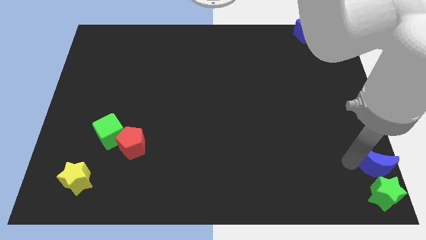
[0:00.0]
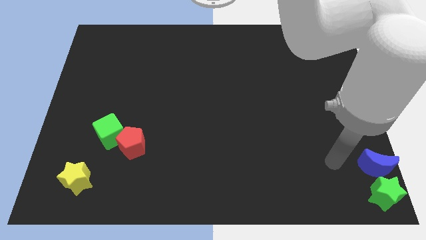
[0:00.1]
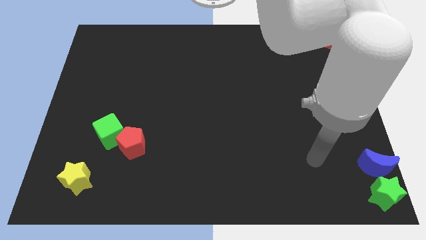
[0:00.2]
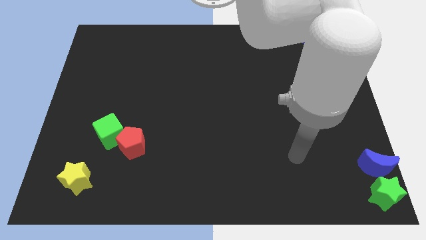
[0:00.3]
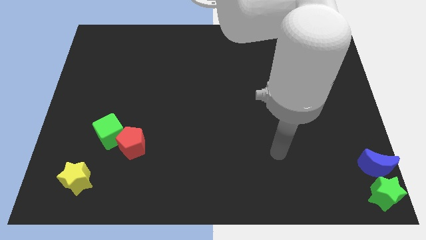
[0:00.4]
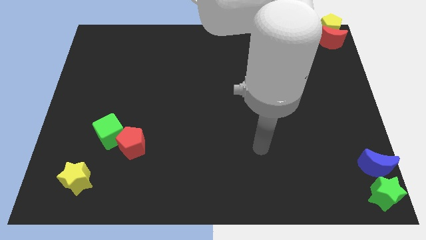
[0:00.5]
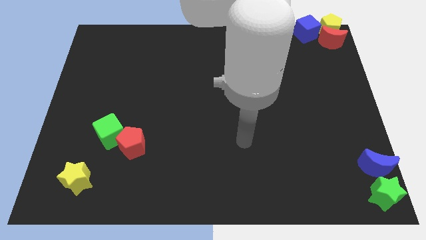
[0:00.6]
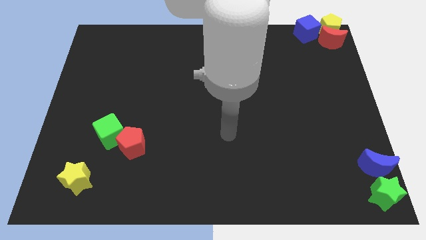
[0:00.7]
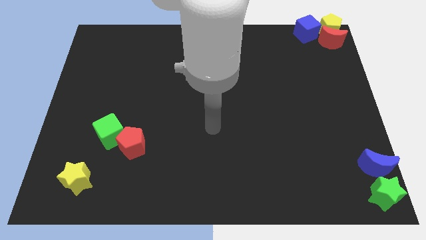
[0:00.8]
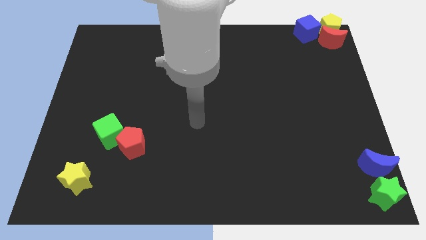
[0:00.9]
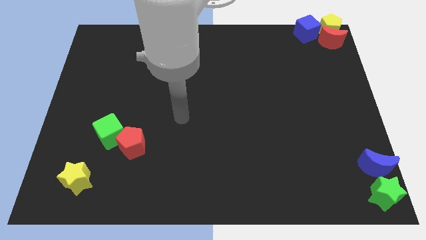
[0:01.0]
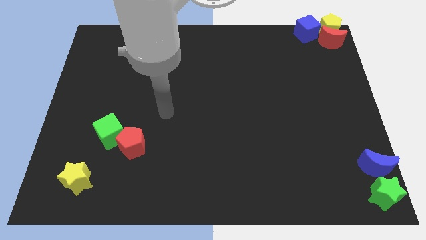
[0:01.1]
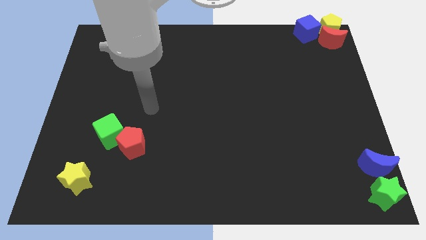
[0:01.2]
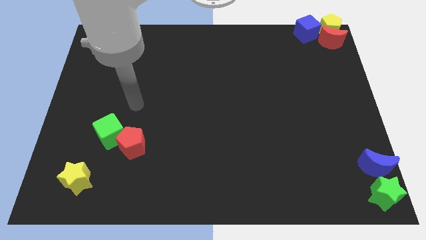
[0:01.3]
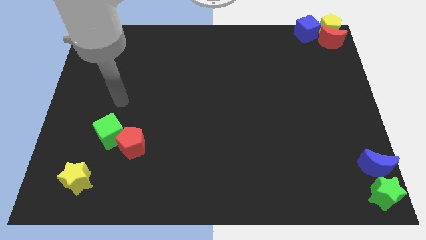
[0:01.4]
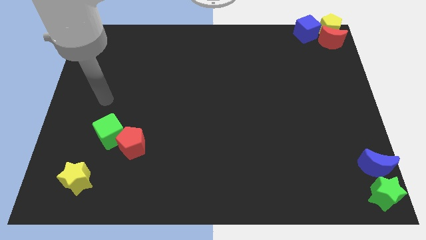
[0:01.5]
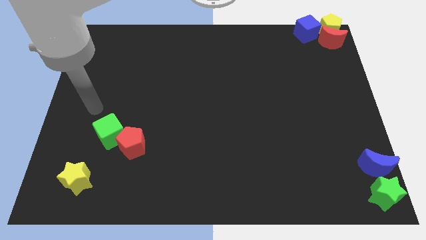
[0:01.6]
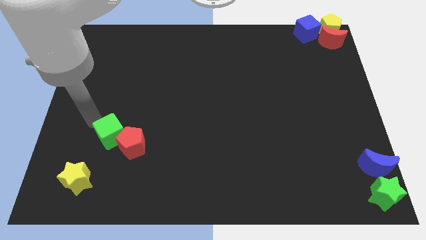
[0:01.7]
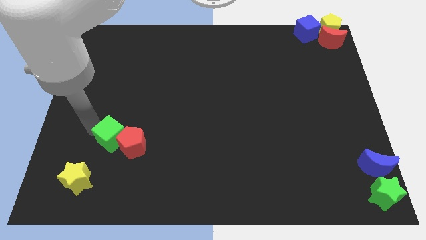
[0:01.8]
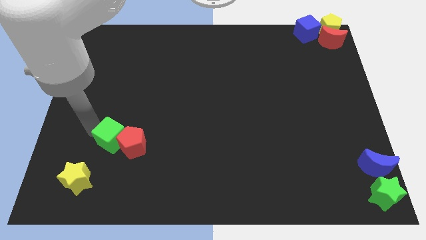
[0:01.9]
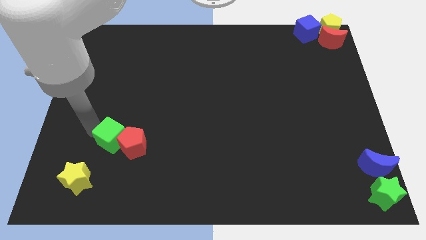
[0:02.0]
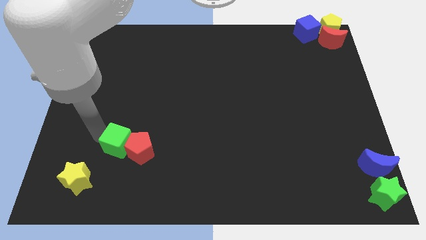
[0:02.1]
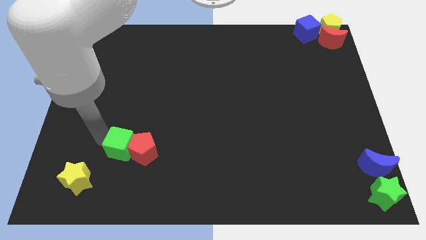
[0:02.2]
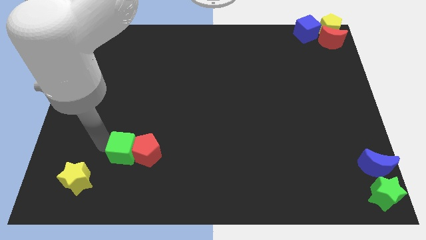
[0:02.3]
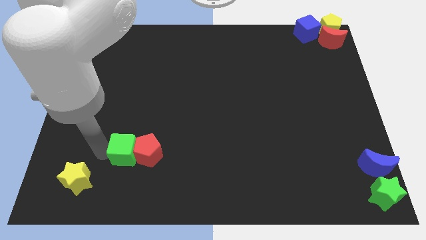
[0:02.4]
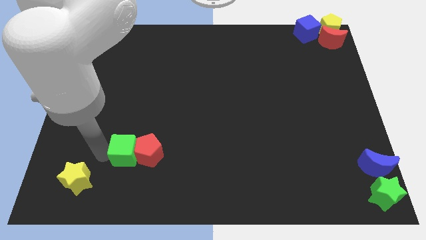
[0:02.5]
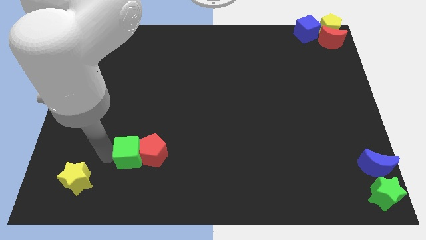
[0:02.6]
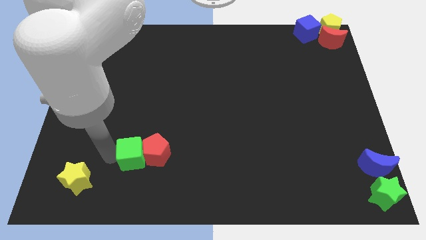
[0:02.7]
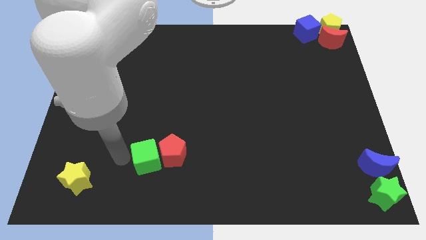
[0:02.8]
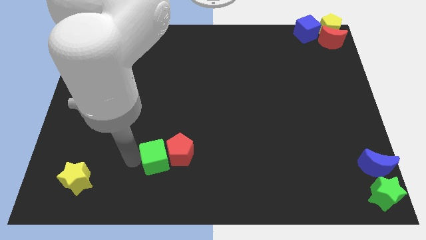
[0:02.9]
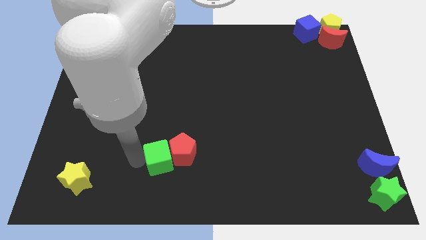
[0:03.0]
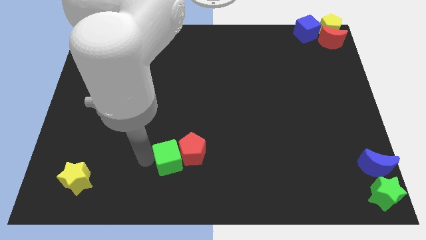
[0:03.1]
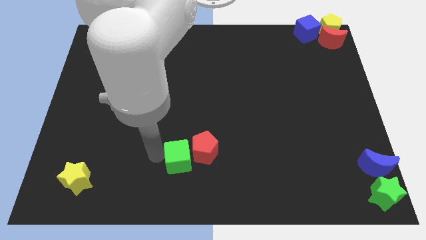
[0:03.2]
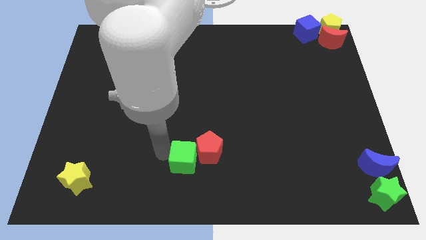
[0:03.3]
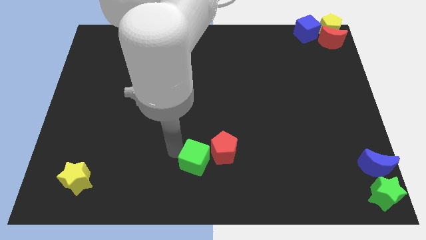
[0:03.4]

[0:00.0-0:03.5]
push the green cube and red pentagon to the right side of the table

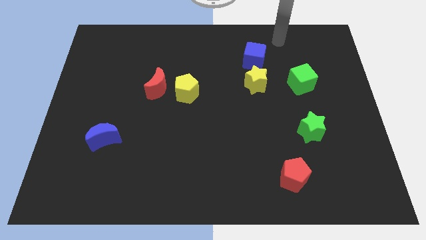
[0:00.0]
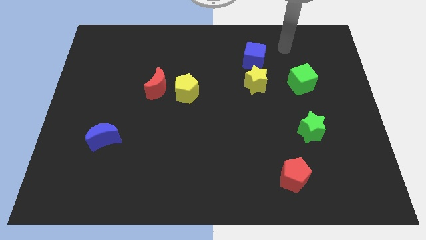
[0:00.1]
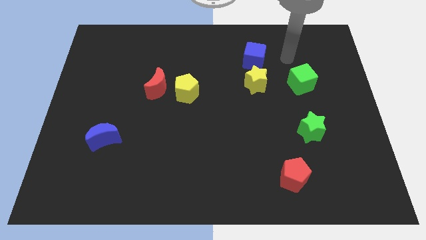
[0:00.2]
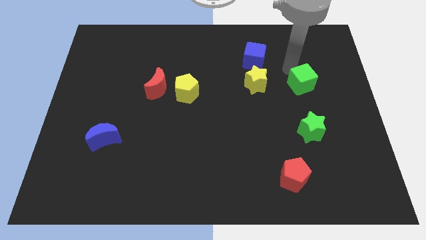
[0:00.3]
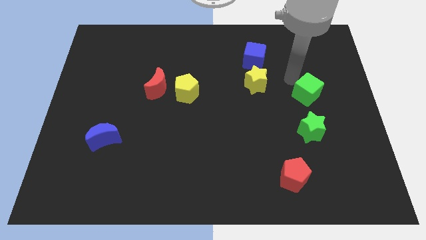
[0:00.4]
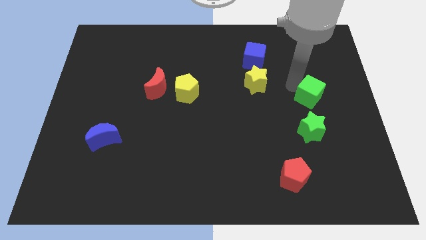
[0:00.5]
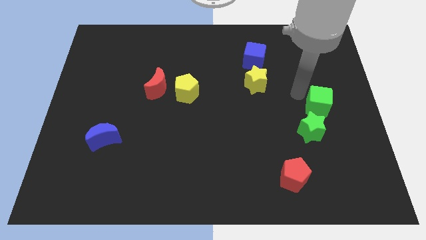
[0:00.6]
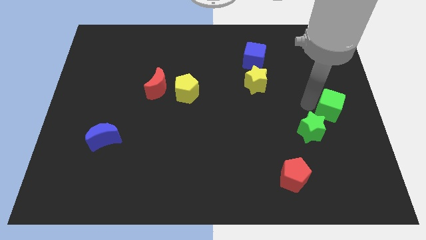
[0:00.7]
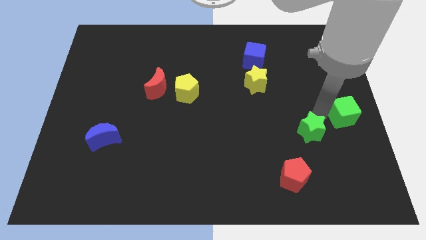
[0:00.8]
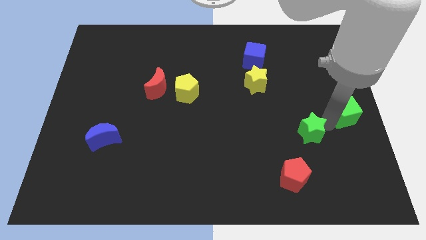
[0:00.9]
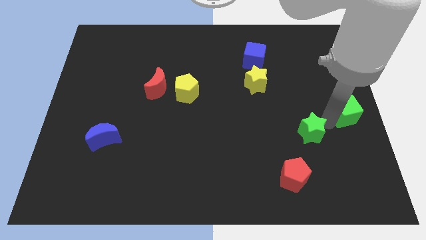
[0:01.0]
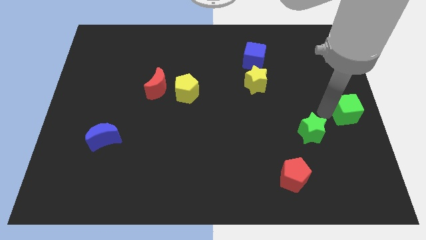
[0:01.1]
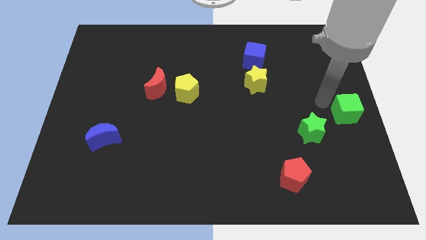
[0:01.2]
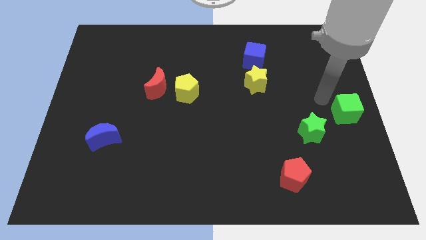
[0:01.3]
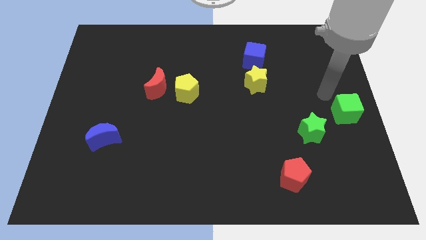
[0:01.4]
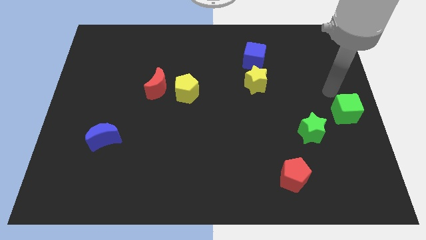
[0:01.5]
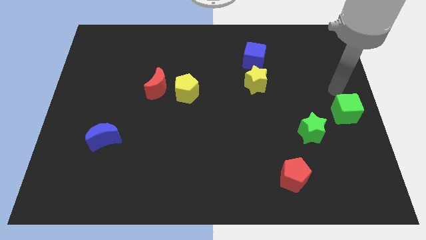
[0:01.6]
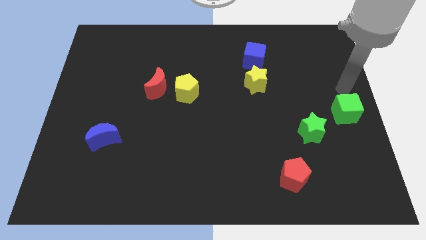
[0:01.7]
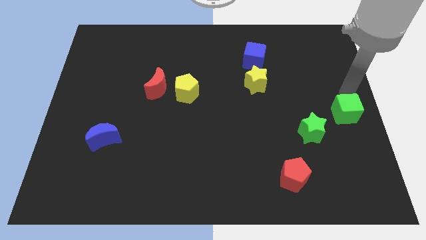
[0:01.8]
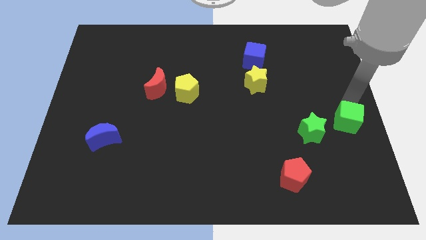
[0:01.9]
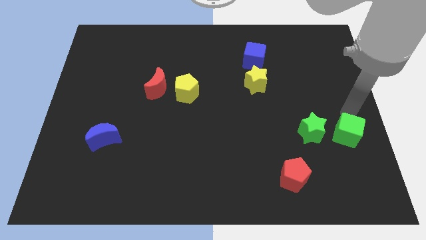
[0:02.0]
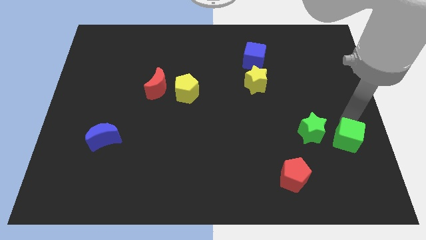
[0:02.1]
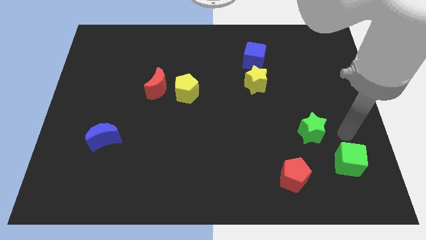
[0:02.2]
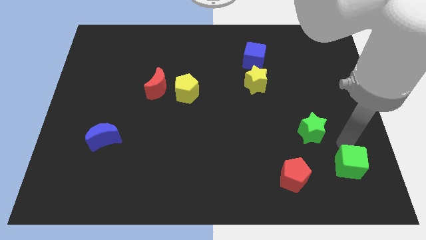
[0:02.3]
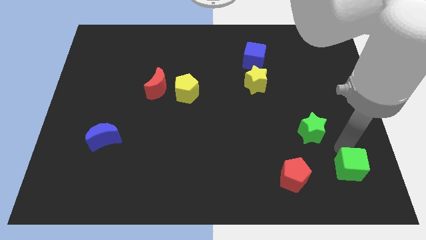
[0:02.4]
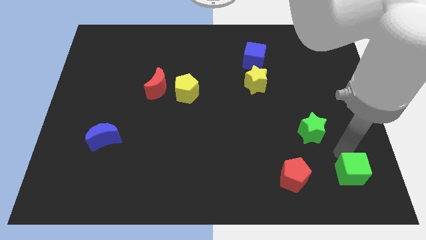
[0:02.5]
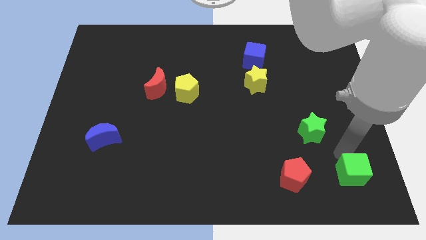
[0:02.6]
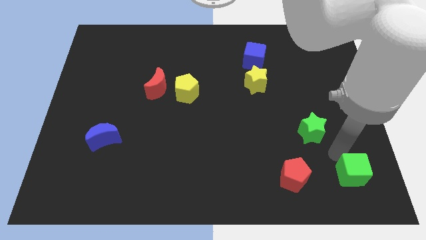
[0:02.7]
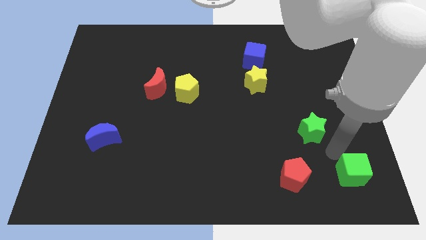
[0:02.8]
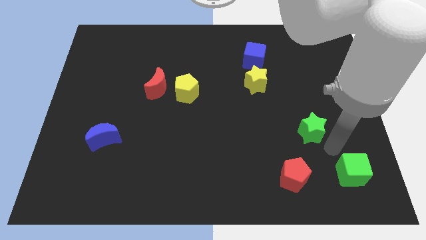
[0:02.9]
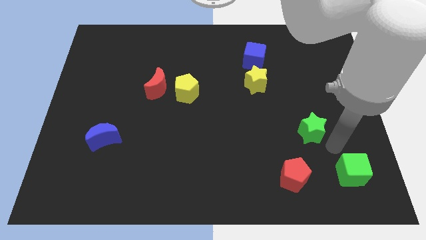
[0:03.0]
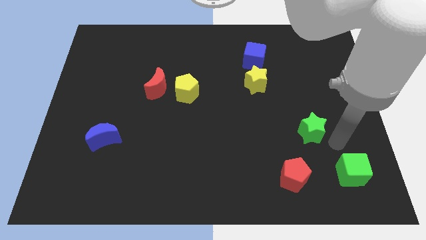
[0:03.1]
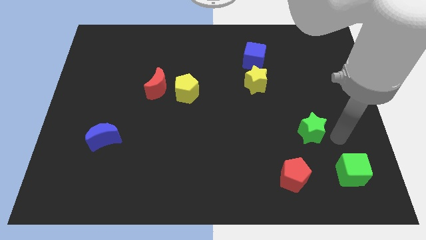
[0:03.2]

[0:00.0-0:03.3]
move the green start to the right of the red pentagon

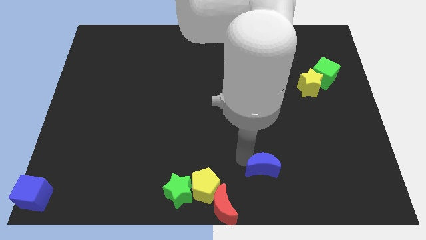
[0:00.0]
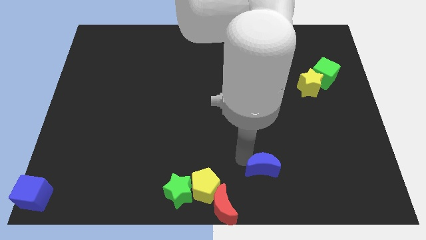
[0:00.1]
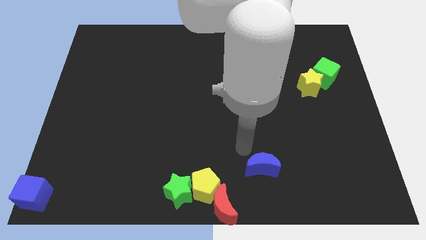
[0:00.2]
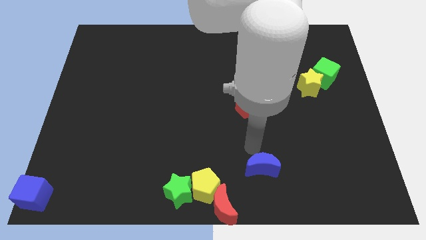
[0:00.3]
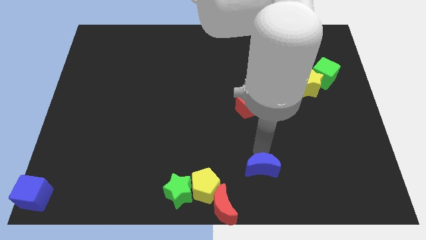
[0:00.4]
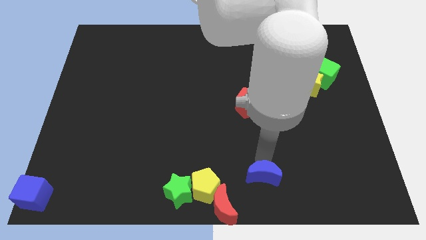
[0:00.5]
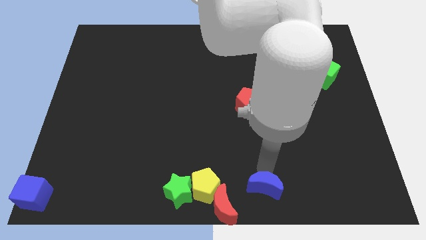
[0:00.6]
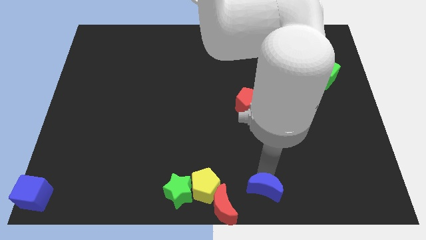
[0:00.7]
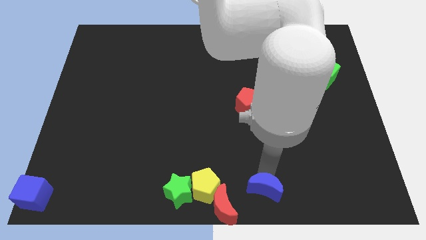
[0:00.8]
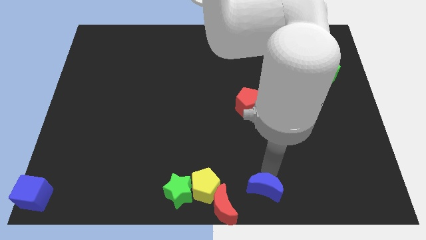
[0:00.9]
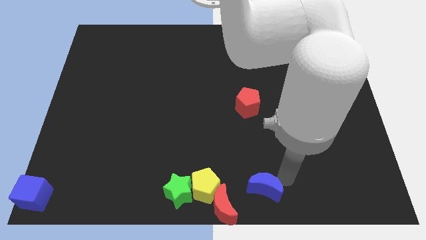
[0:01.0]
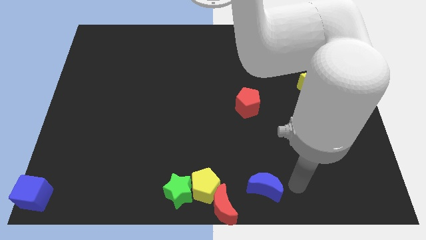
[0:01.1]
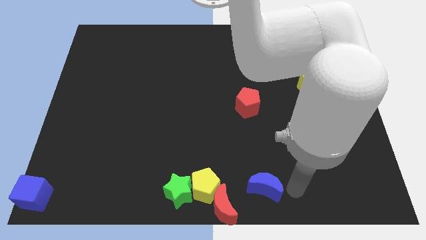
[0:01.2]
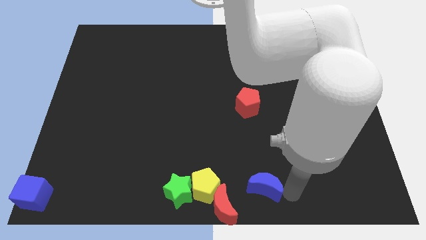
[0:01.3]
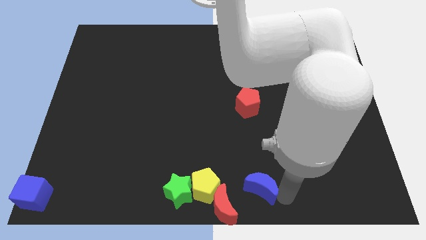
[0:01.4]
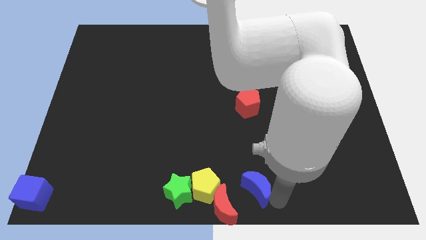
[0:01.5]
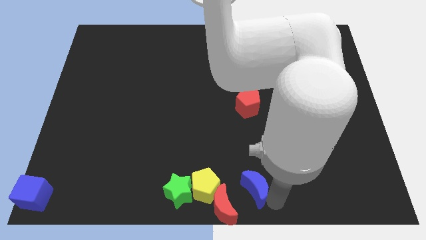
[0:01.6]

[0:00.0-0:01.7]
push the blue crescent towards the red crescent

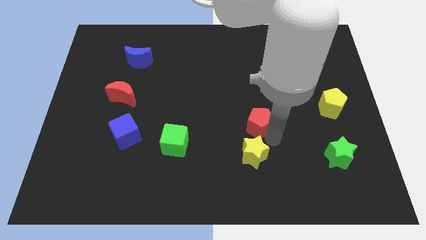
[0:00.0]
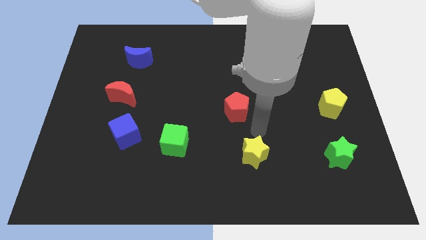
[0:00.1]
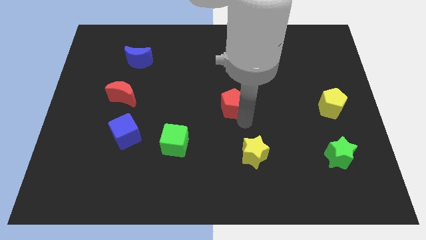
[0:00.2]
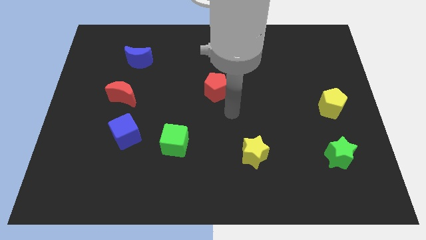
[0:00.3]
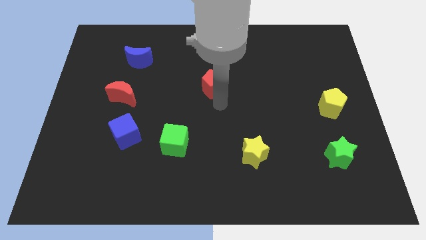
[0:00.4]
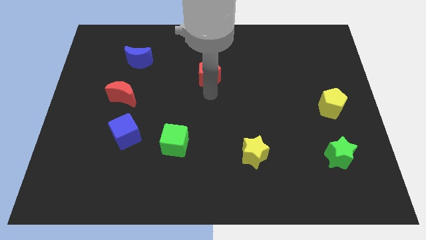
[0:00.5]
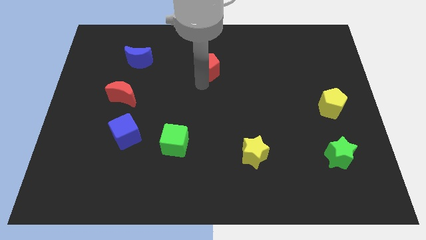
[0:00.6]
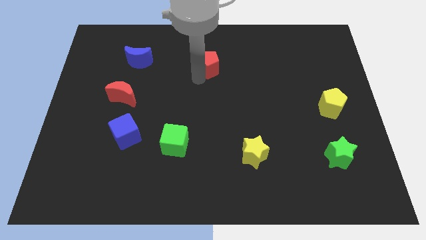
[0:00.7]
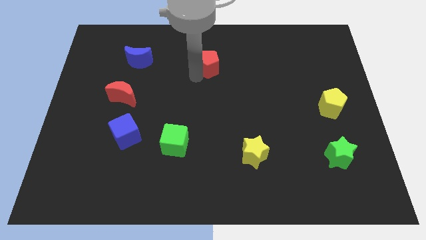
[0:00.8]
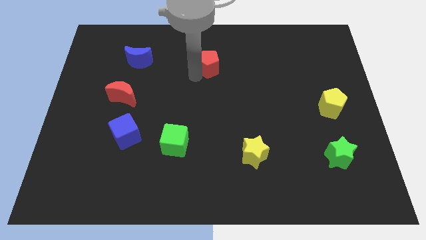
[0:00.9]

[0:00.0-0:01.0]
place red pentagon parallel right to blue crescent
